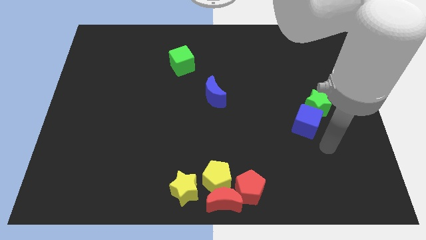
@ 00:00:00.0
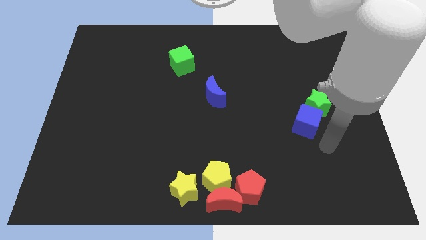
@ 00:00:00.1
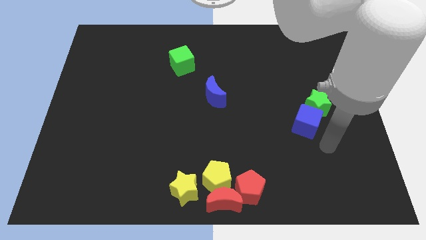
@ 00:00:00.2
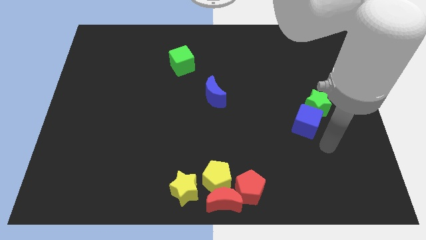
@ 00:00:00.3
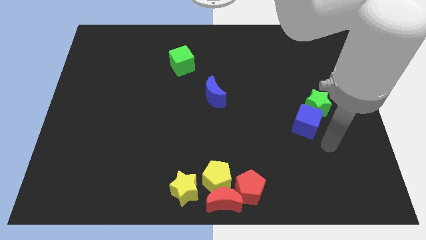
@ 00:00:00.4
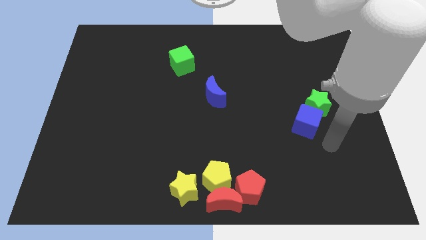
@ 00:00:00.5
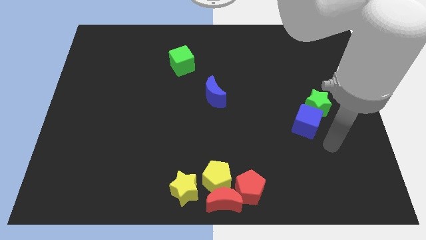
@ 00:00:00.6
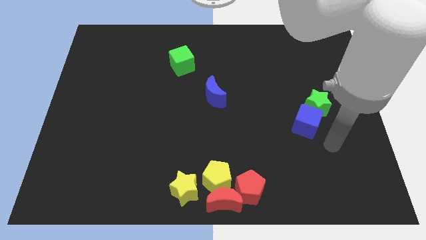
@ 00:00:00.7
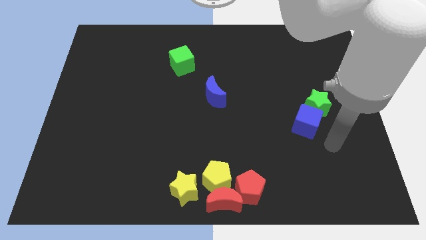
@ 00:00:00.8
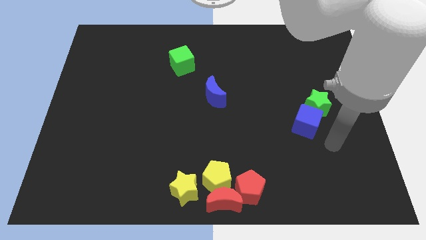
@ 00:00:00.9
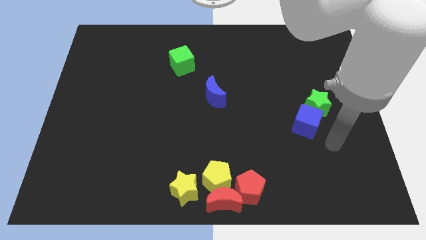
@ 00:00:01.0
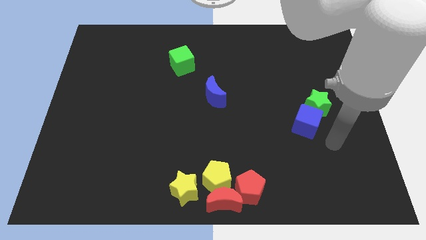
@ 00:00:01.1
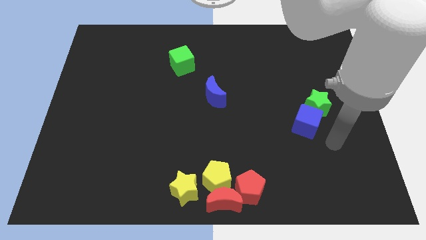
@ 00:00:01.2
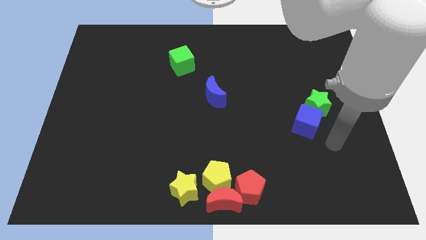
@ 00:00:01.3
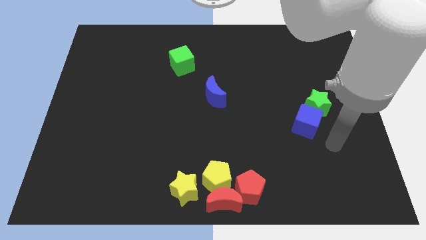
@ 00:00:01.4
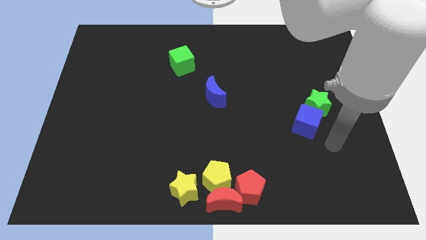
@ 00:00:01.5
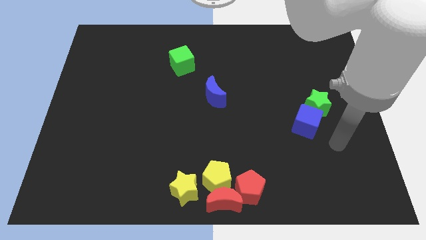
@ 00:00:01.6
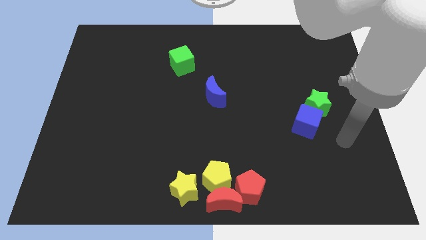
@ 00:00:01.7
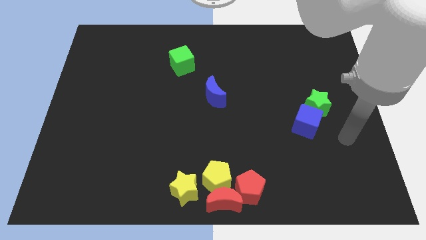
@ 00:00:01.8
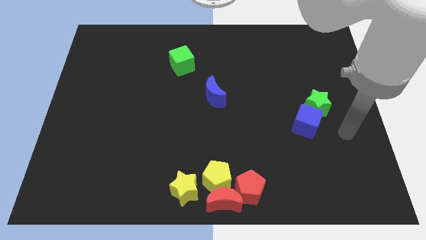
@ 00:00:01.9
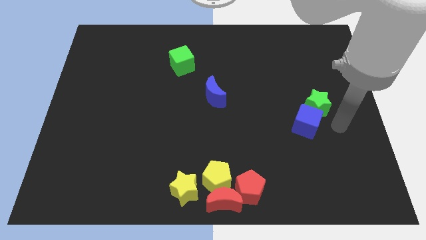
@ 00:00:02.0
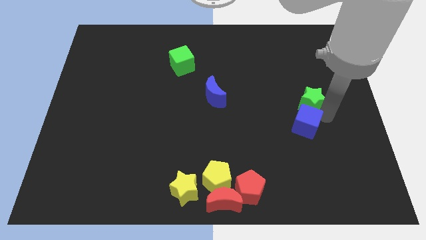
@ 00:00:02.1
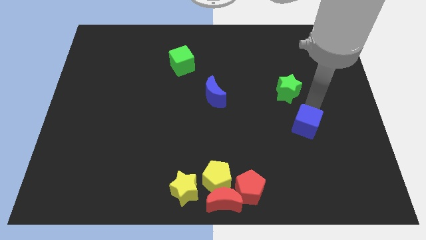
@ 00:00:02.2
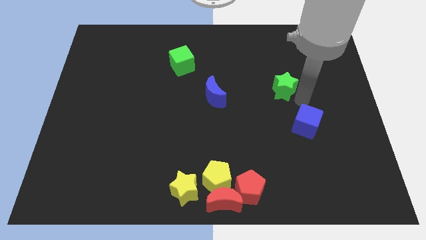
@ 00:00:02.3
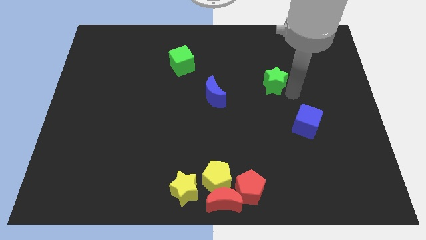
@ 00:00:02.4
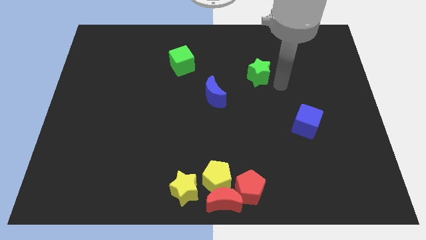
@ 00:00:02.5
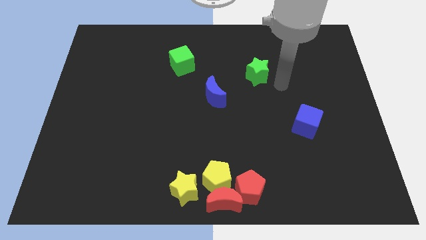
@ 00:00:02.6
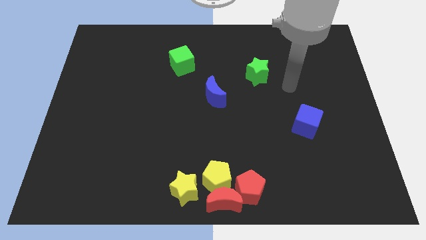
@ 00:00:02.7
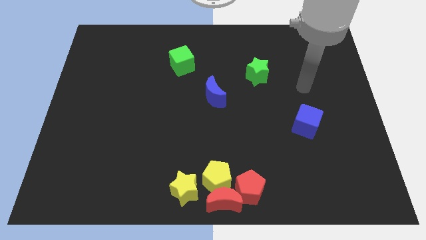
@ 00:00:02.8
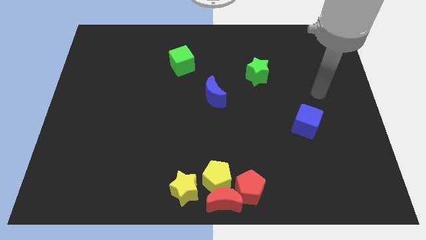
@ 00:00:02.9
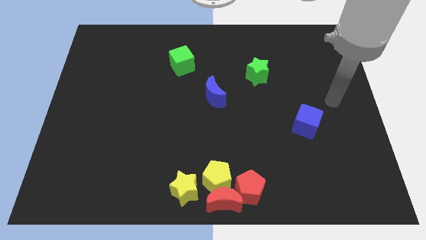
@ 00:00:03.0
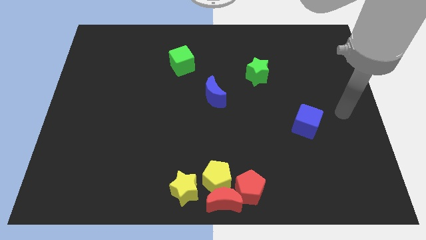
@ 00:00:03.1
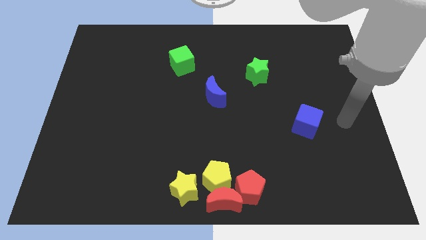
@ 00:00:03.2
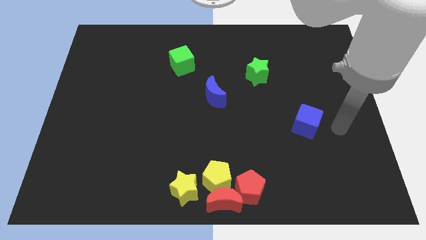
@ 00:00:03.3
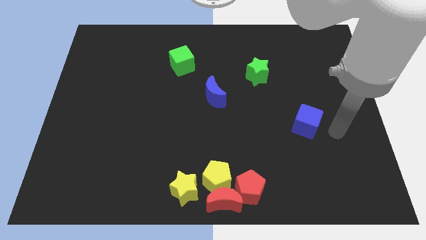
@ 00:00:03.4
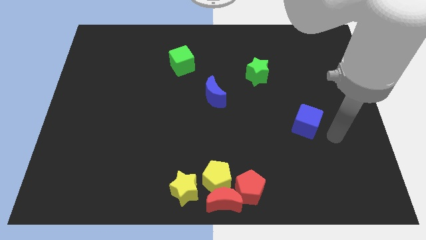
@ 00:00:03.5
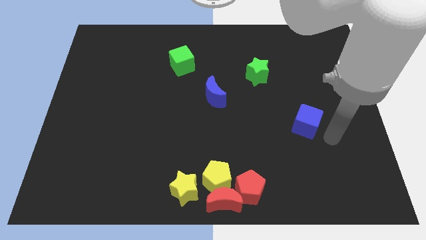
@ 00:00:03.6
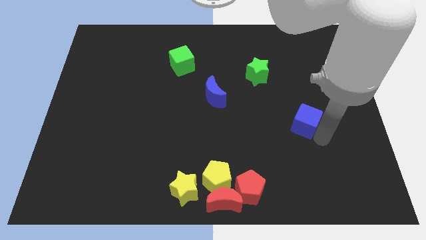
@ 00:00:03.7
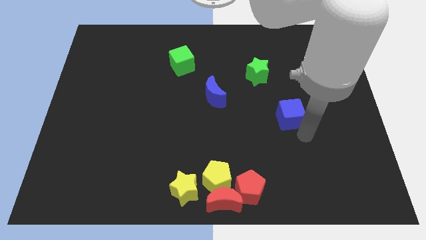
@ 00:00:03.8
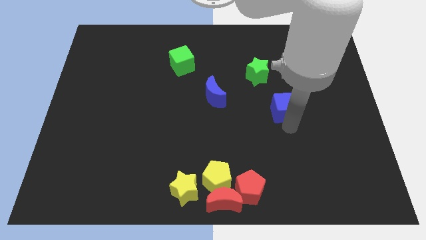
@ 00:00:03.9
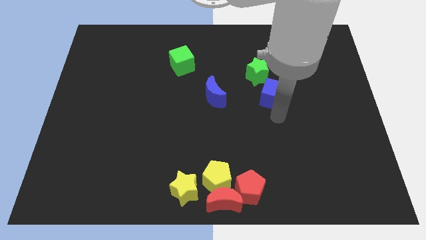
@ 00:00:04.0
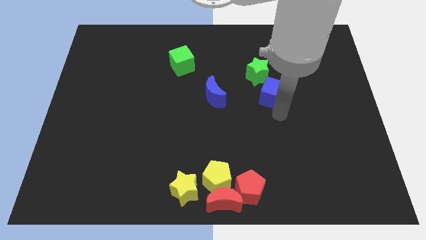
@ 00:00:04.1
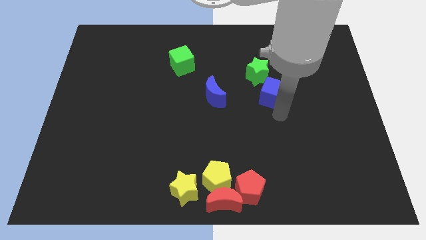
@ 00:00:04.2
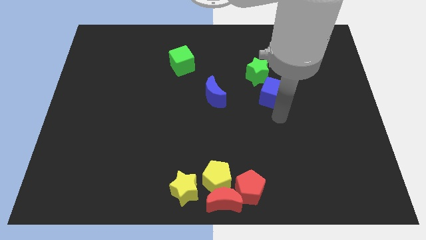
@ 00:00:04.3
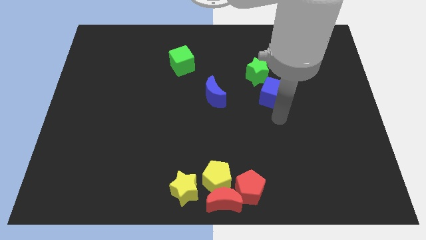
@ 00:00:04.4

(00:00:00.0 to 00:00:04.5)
push the green star towards the top of blue cube

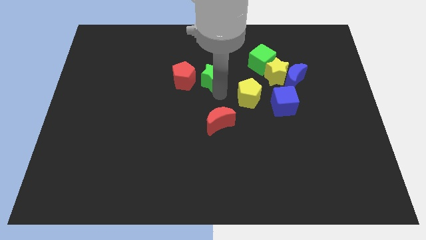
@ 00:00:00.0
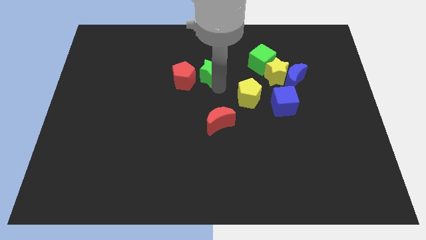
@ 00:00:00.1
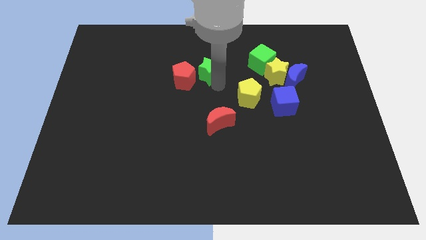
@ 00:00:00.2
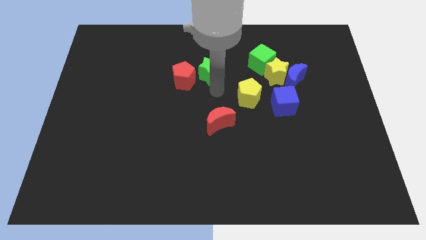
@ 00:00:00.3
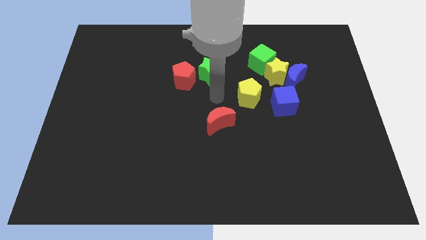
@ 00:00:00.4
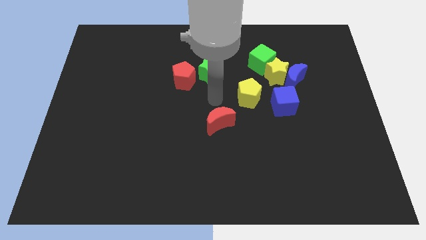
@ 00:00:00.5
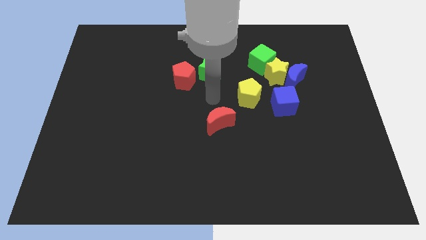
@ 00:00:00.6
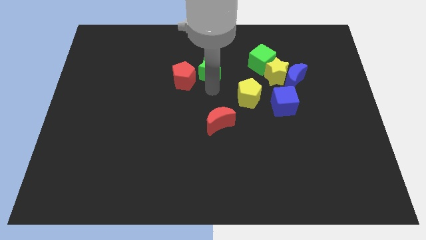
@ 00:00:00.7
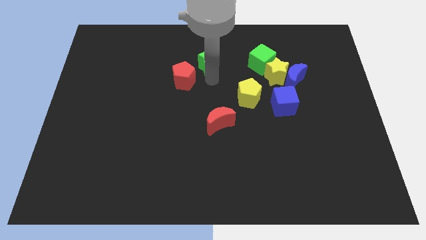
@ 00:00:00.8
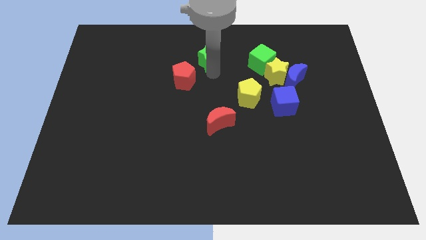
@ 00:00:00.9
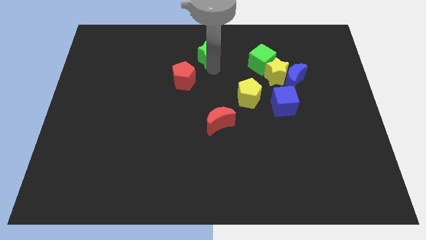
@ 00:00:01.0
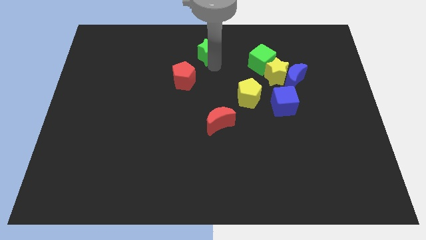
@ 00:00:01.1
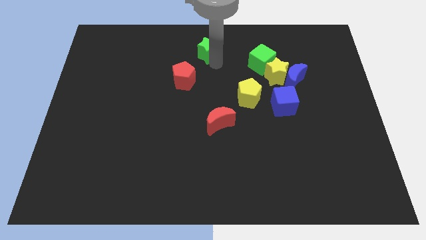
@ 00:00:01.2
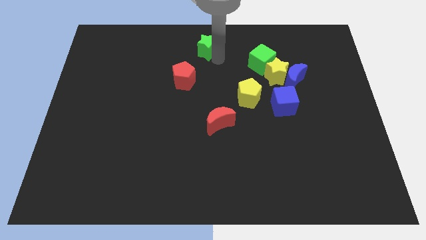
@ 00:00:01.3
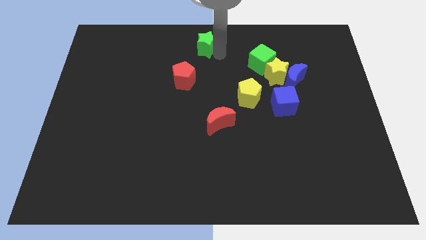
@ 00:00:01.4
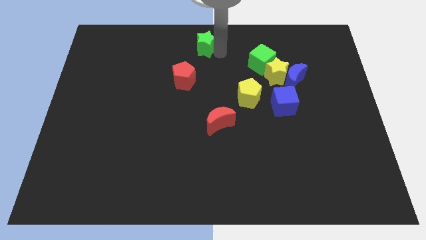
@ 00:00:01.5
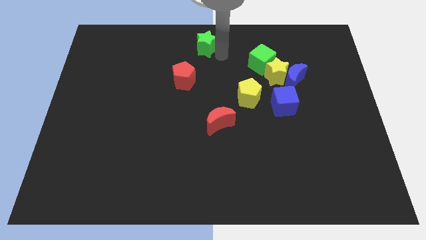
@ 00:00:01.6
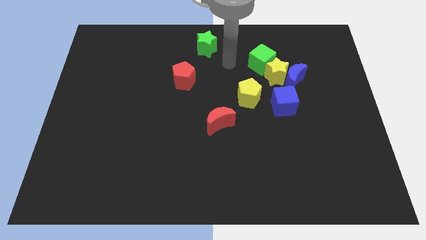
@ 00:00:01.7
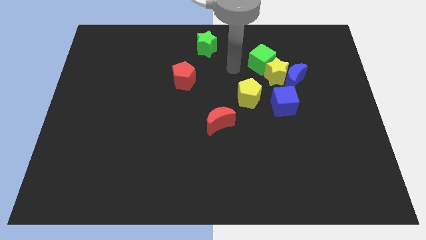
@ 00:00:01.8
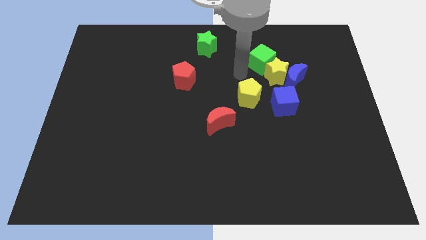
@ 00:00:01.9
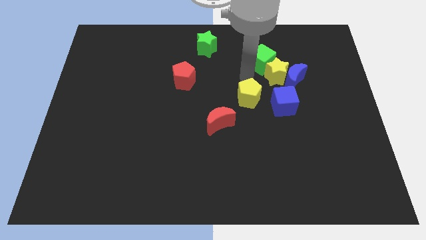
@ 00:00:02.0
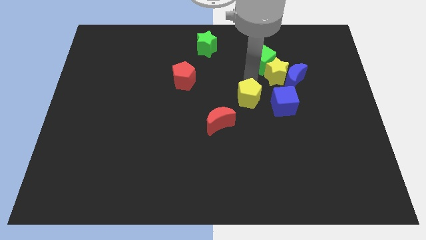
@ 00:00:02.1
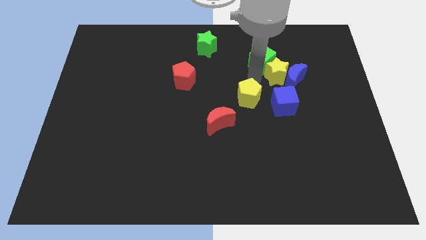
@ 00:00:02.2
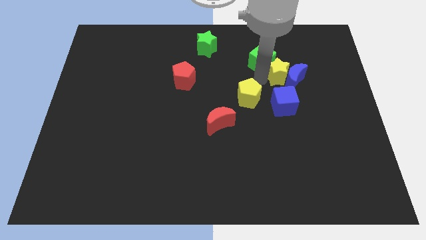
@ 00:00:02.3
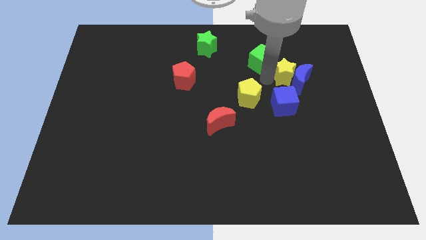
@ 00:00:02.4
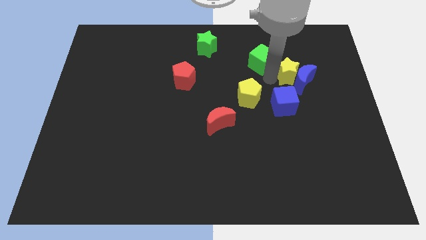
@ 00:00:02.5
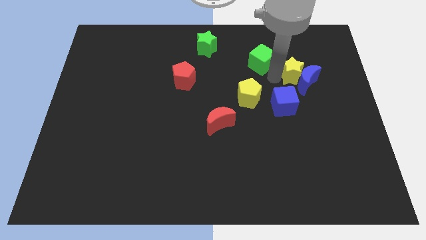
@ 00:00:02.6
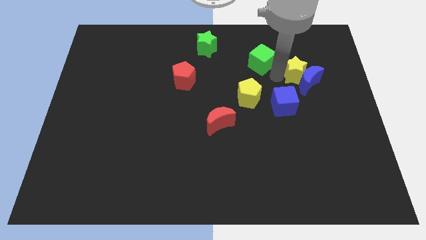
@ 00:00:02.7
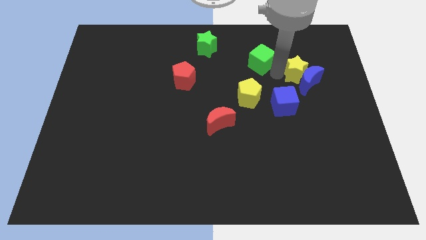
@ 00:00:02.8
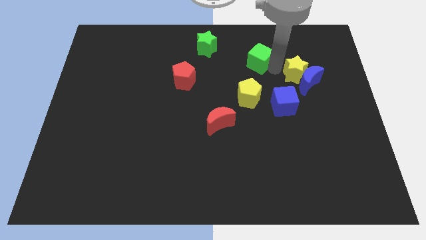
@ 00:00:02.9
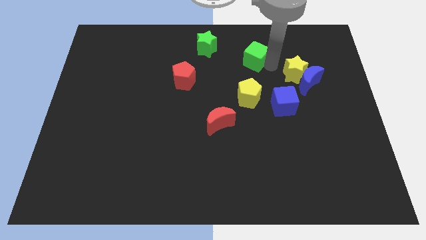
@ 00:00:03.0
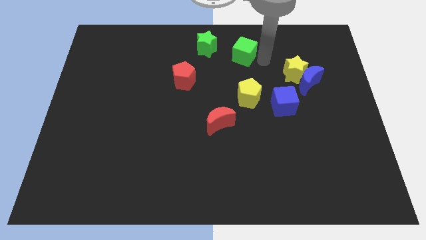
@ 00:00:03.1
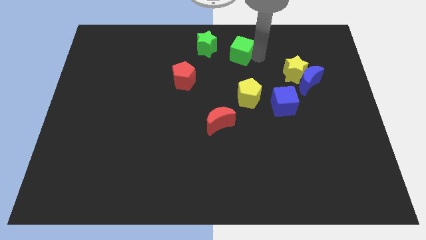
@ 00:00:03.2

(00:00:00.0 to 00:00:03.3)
slide the green blocks towards top center

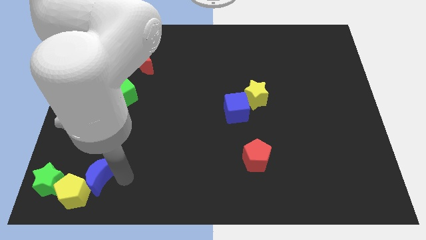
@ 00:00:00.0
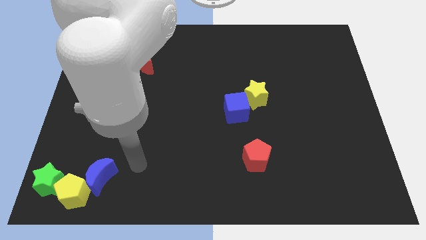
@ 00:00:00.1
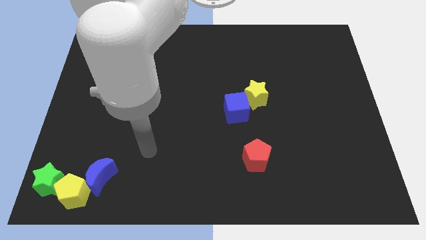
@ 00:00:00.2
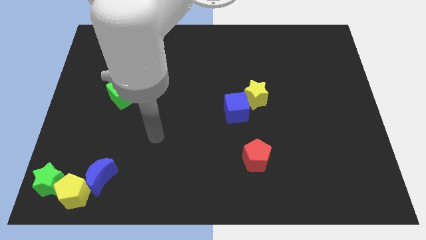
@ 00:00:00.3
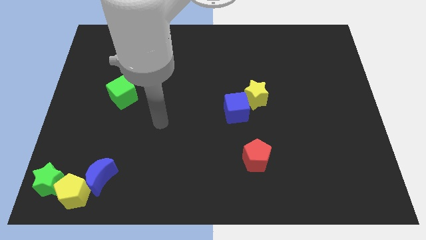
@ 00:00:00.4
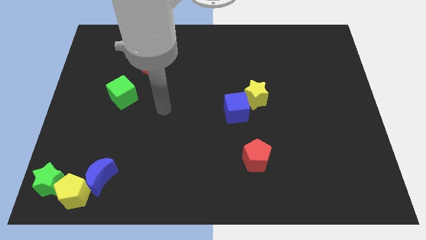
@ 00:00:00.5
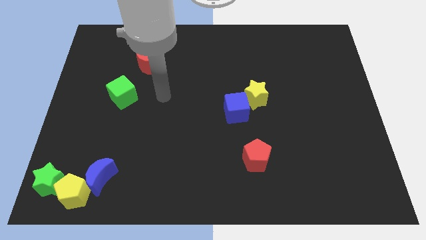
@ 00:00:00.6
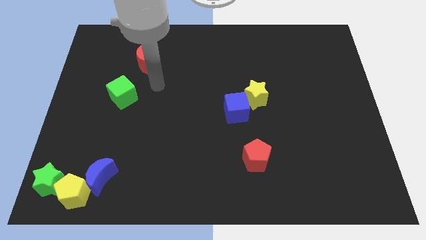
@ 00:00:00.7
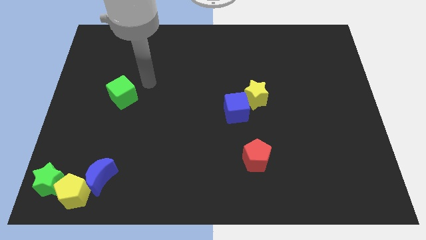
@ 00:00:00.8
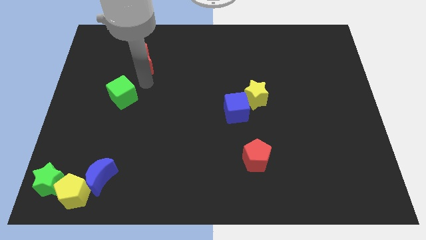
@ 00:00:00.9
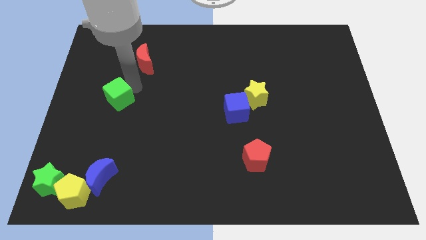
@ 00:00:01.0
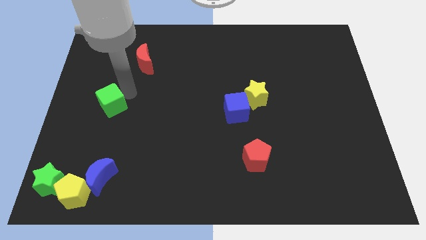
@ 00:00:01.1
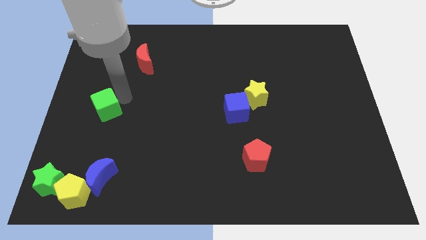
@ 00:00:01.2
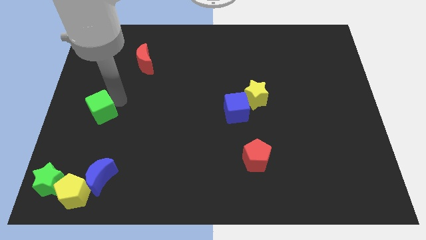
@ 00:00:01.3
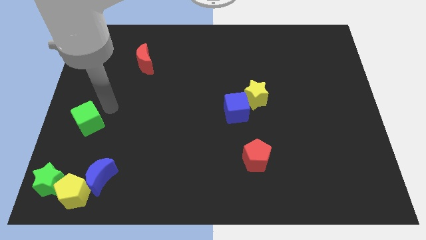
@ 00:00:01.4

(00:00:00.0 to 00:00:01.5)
place the green cube vertically above the yellow pentagon
